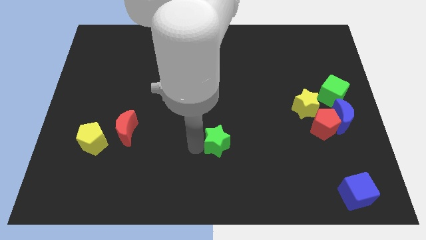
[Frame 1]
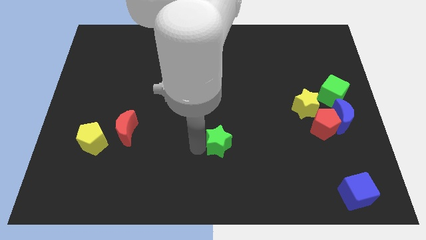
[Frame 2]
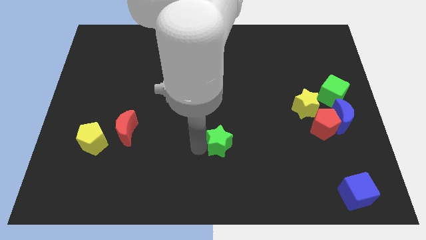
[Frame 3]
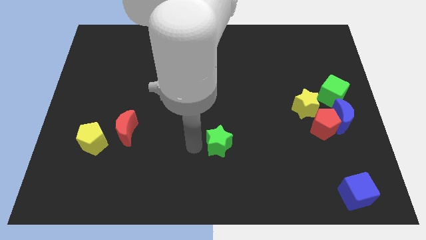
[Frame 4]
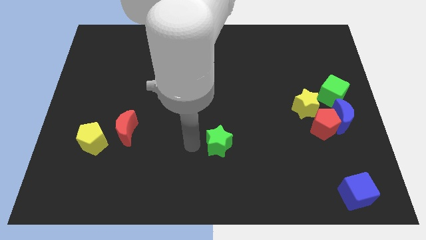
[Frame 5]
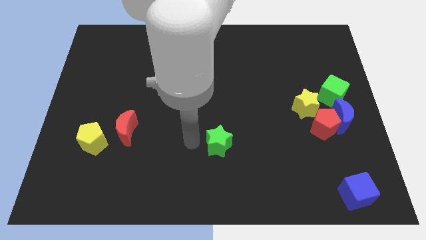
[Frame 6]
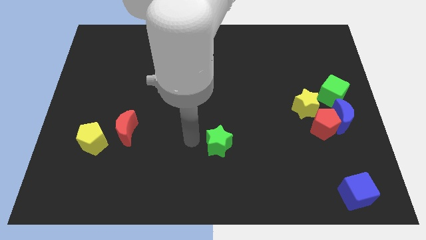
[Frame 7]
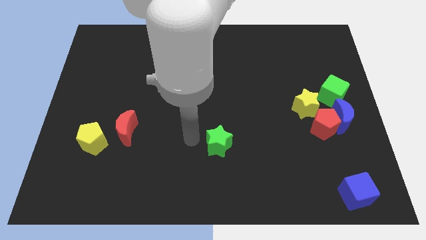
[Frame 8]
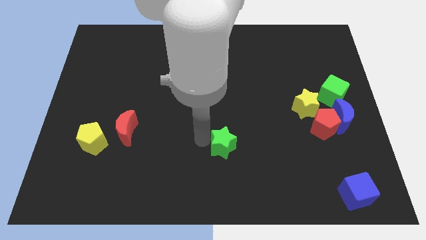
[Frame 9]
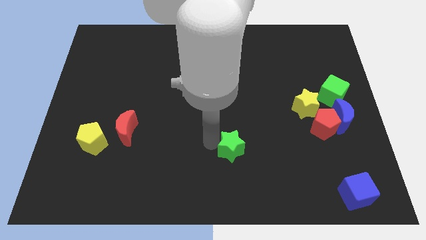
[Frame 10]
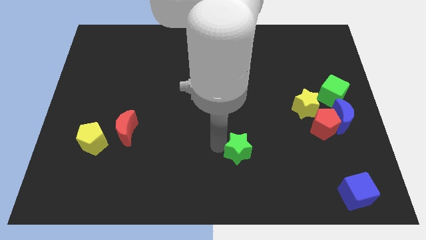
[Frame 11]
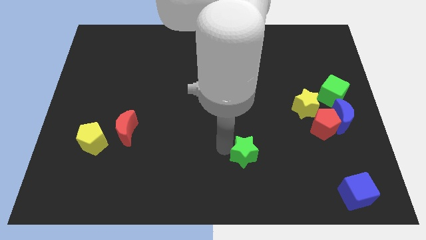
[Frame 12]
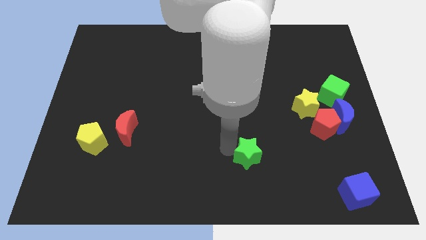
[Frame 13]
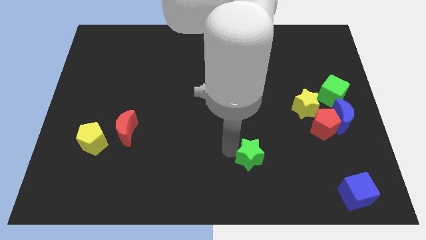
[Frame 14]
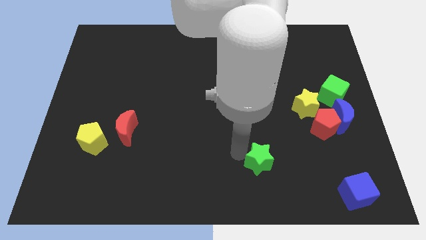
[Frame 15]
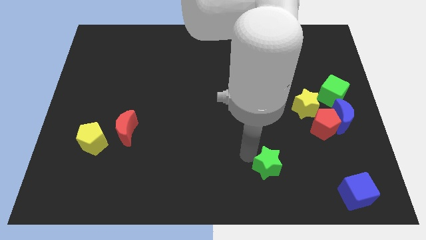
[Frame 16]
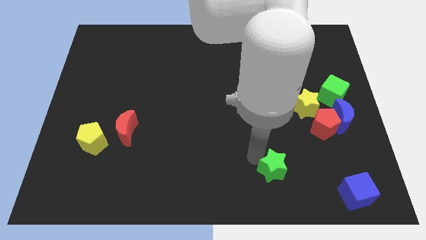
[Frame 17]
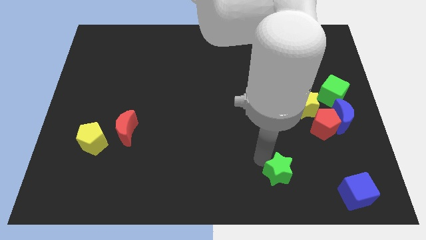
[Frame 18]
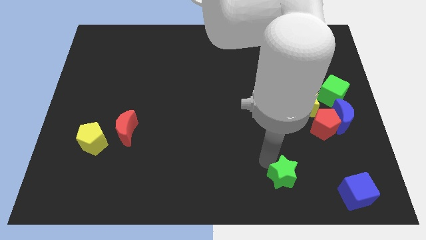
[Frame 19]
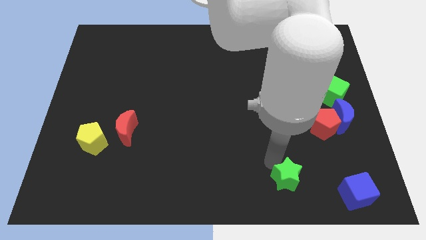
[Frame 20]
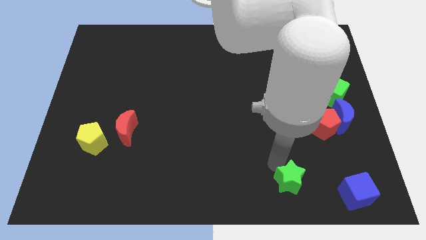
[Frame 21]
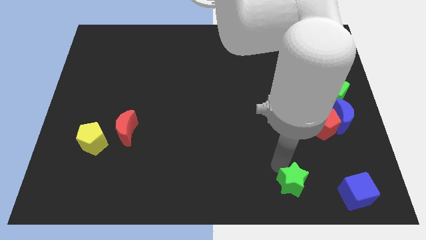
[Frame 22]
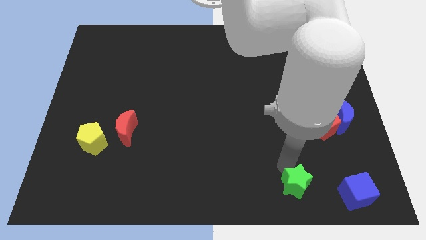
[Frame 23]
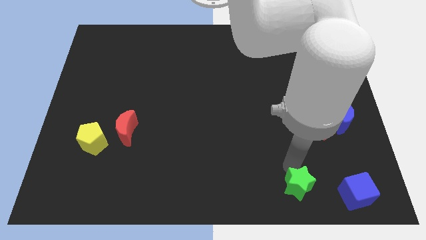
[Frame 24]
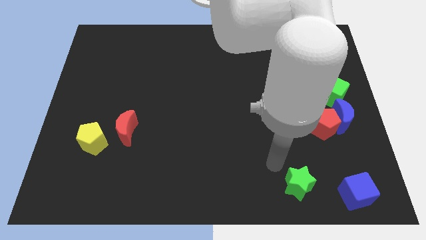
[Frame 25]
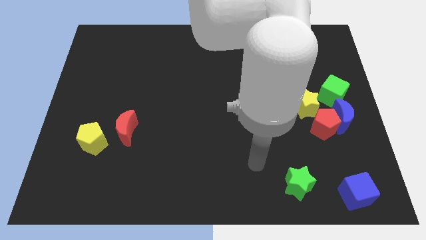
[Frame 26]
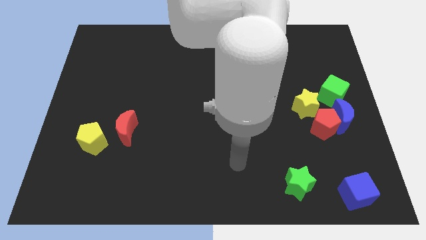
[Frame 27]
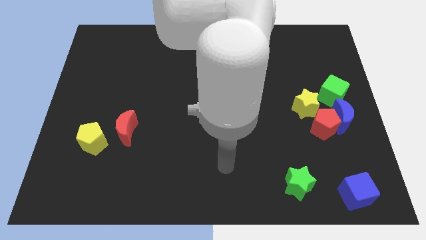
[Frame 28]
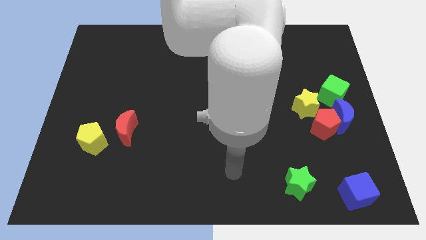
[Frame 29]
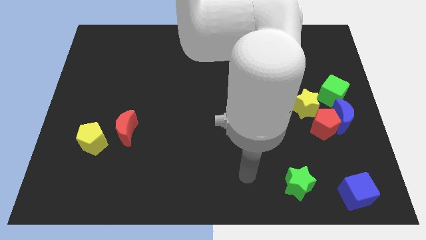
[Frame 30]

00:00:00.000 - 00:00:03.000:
push the green star towards the blue cube

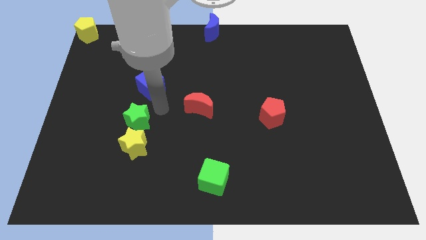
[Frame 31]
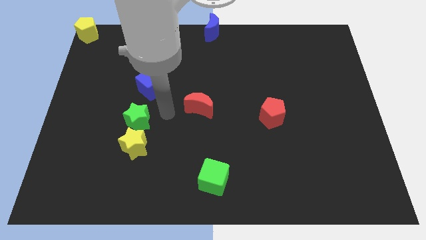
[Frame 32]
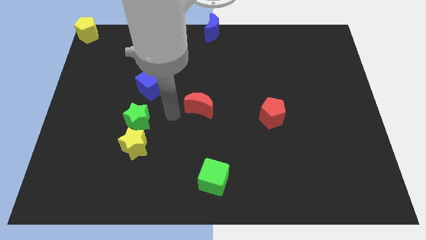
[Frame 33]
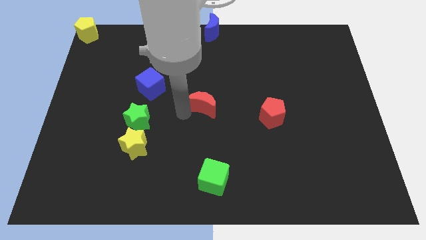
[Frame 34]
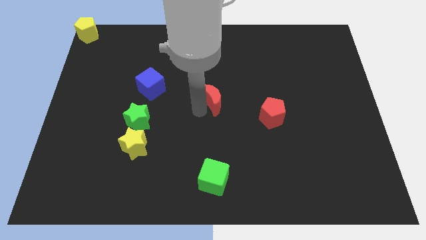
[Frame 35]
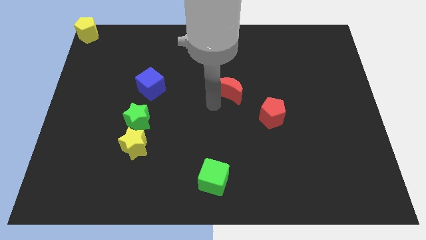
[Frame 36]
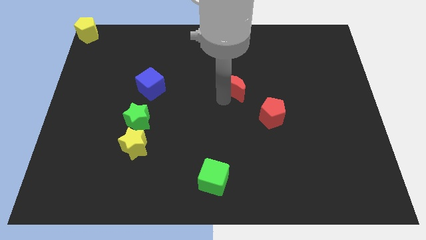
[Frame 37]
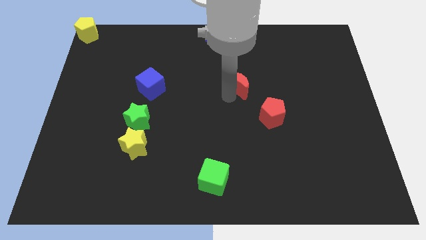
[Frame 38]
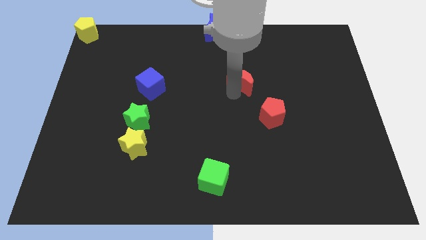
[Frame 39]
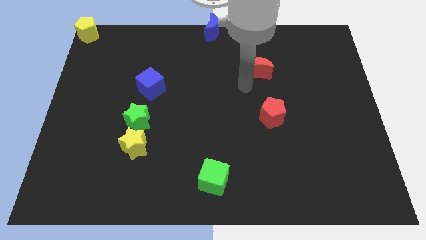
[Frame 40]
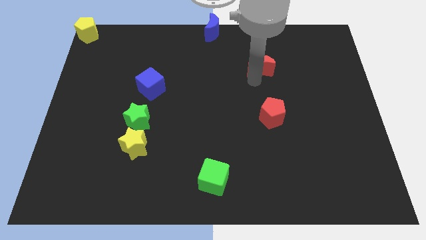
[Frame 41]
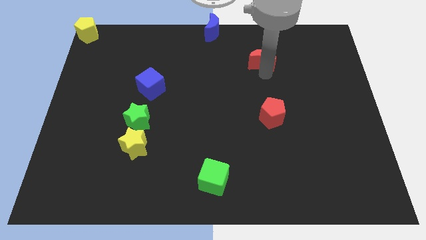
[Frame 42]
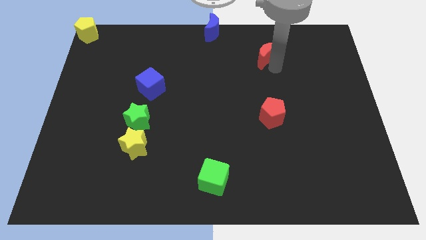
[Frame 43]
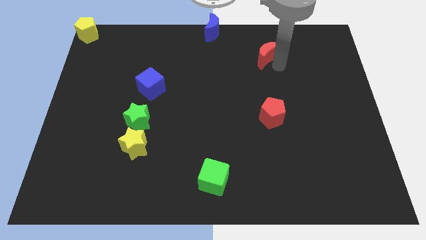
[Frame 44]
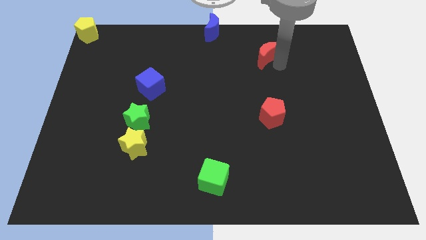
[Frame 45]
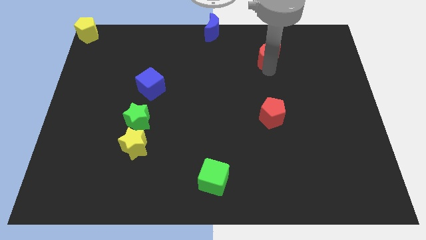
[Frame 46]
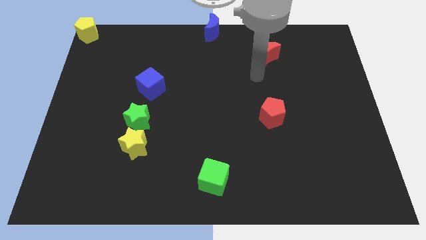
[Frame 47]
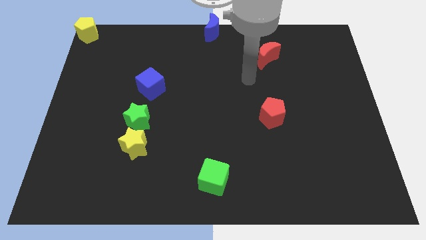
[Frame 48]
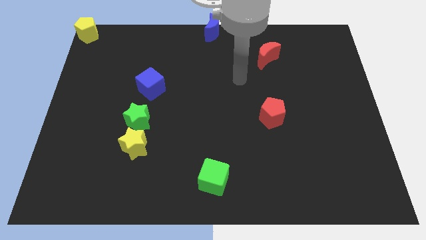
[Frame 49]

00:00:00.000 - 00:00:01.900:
push red crescent above red pentagon

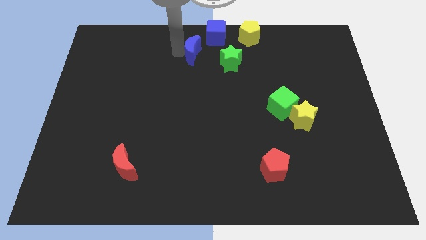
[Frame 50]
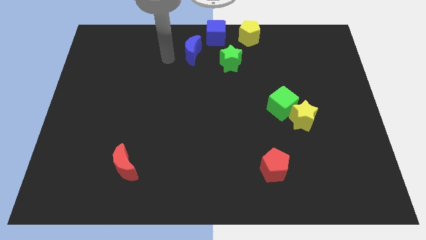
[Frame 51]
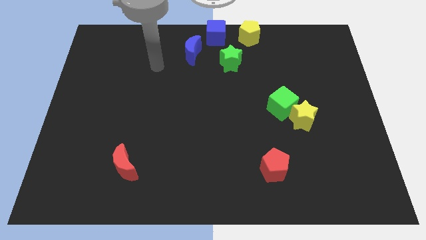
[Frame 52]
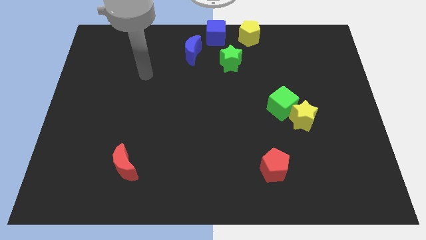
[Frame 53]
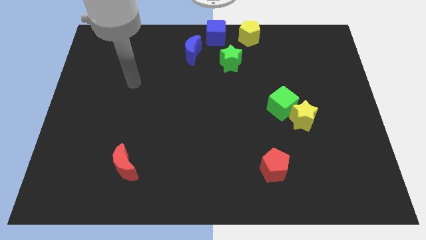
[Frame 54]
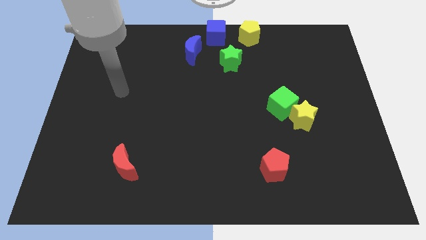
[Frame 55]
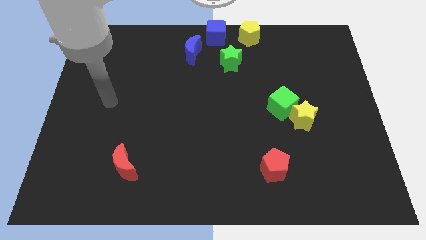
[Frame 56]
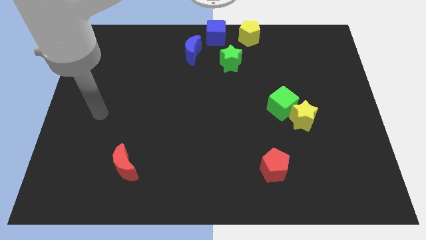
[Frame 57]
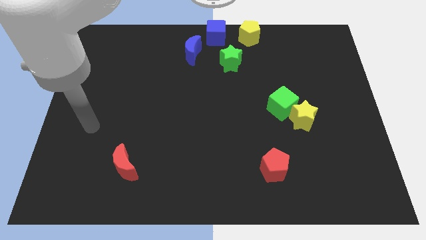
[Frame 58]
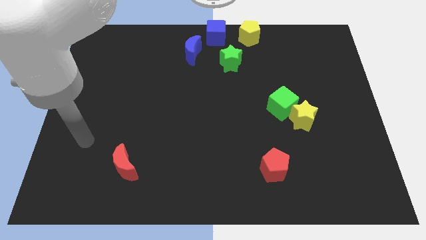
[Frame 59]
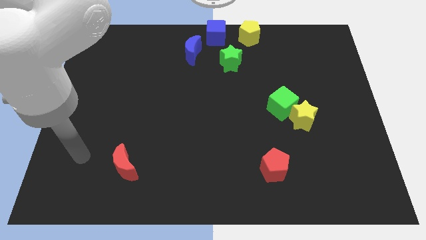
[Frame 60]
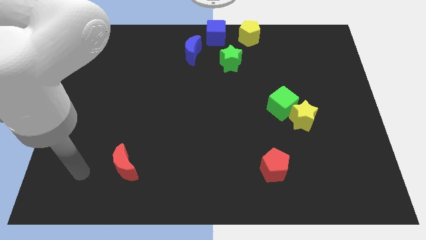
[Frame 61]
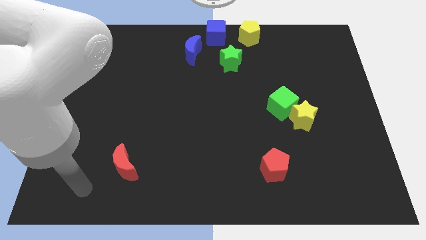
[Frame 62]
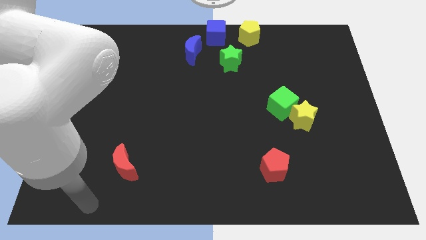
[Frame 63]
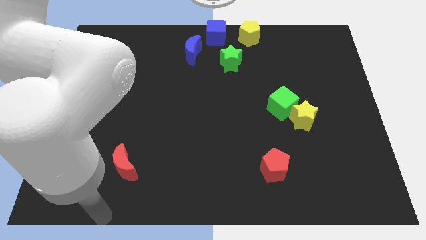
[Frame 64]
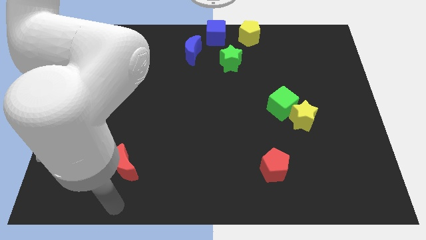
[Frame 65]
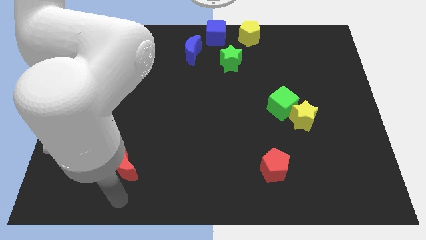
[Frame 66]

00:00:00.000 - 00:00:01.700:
move your arm away from the blue moon

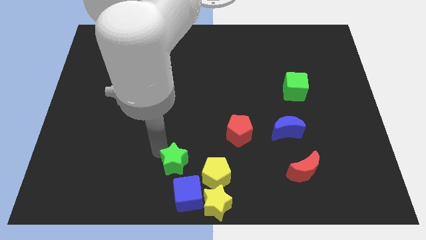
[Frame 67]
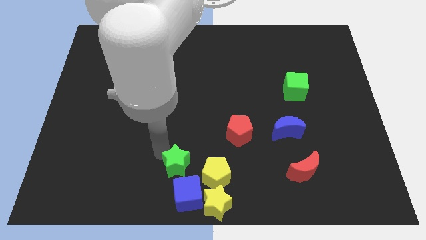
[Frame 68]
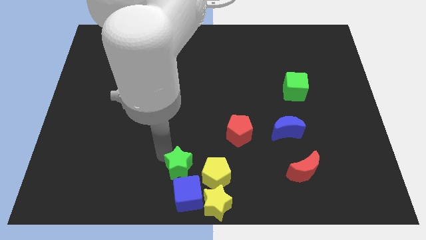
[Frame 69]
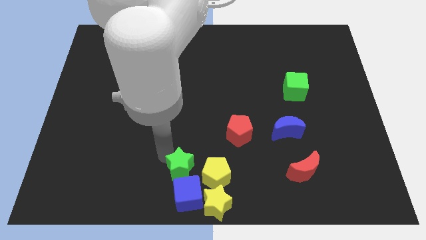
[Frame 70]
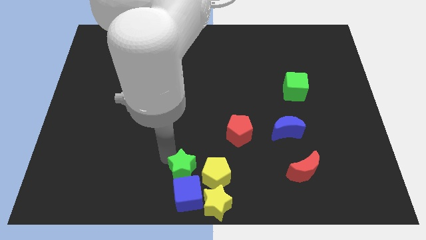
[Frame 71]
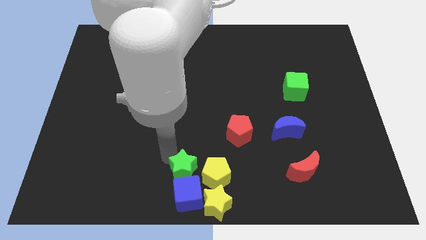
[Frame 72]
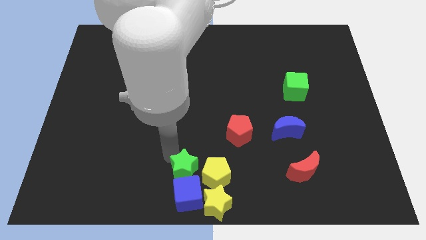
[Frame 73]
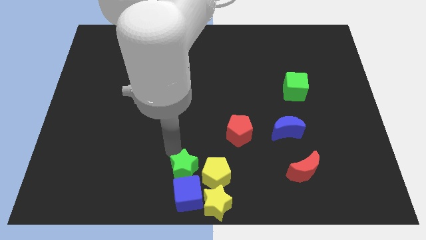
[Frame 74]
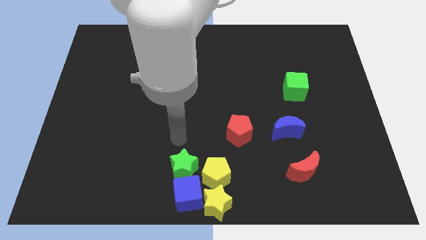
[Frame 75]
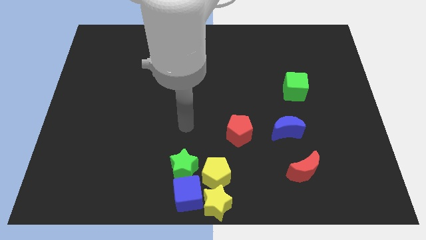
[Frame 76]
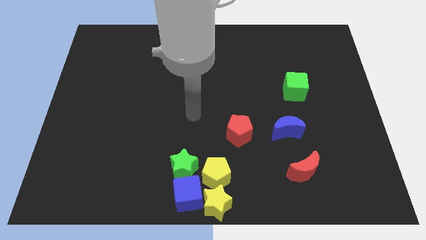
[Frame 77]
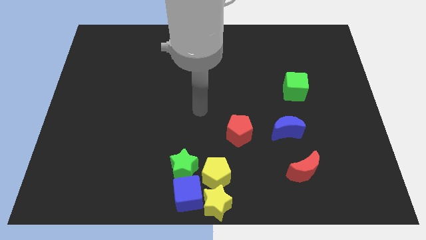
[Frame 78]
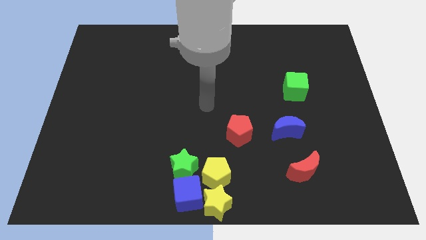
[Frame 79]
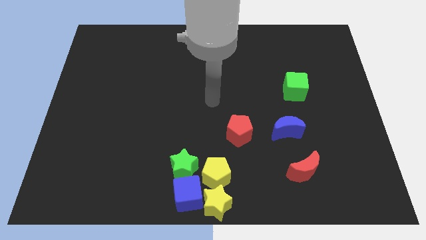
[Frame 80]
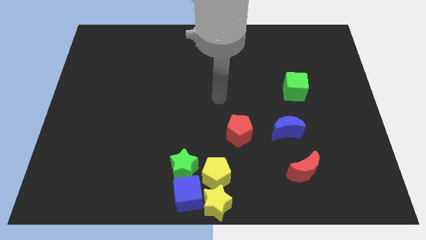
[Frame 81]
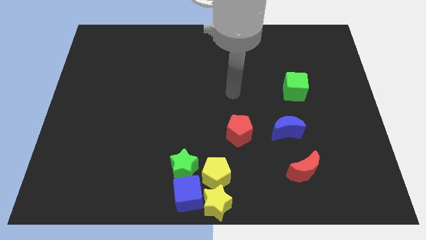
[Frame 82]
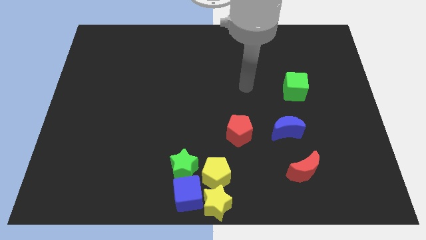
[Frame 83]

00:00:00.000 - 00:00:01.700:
place the green star on top of blue cube

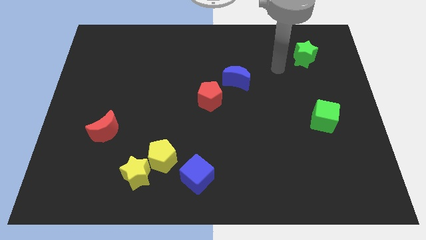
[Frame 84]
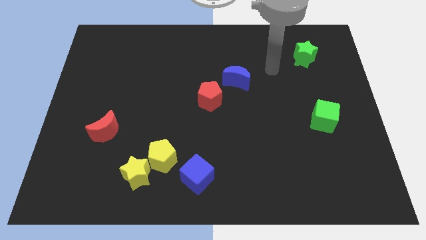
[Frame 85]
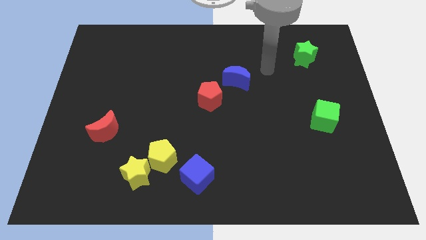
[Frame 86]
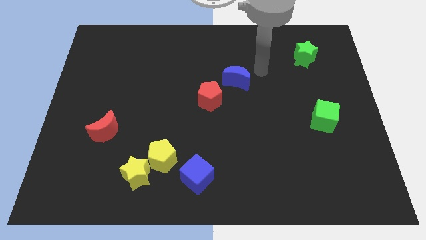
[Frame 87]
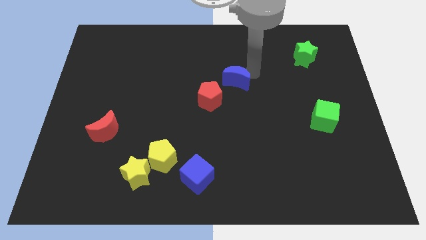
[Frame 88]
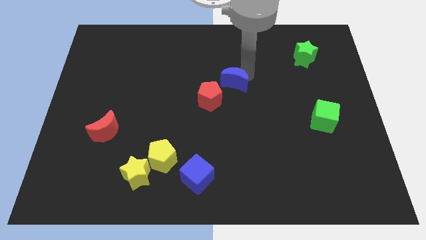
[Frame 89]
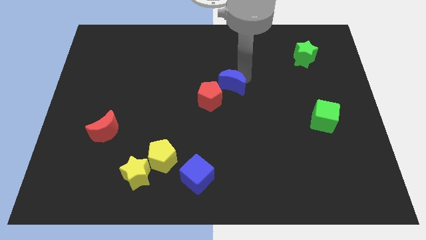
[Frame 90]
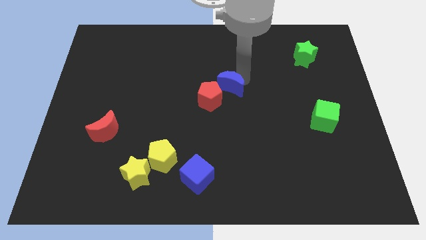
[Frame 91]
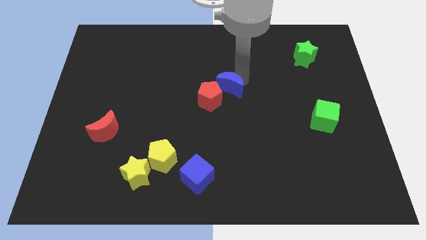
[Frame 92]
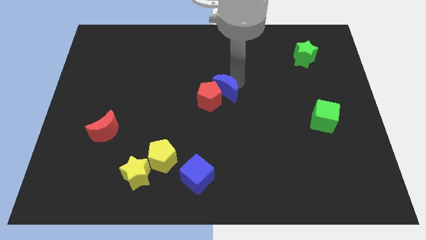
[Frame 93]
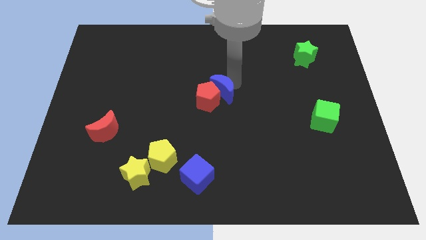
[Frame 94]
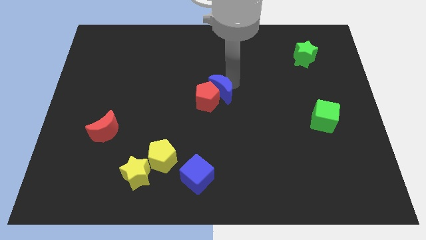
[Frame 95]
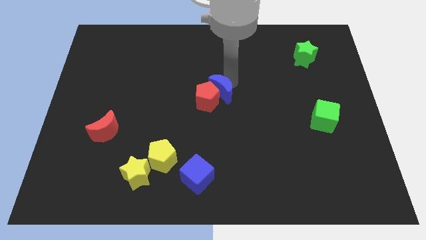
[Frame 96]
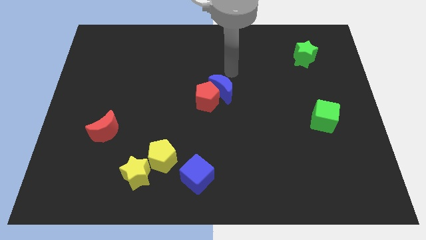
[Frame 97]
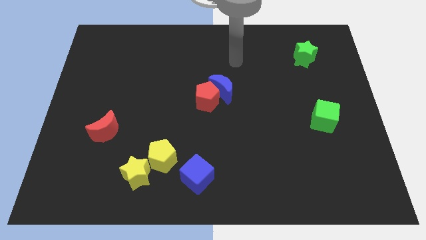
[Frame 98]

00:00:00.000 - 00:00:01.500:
move the blue crescent into the red pentagon
